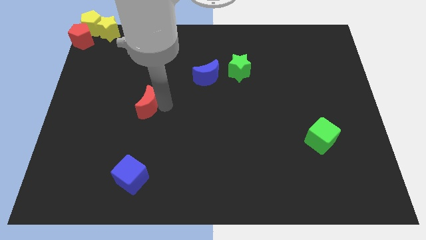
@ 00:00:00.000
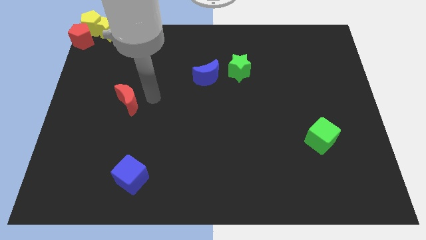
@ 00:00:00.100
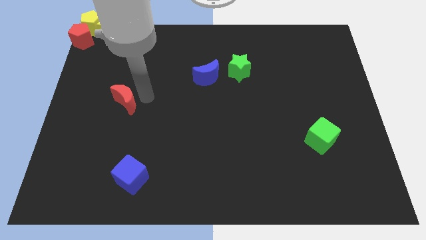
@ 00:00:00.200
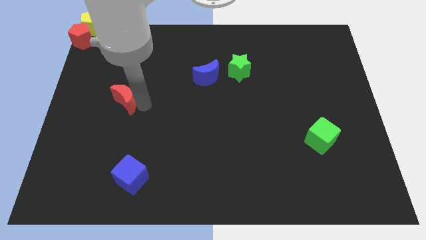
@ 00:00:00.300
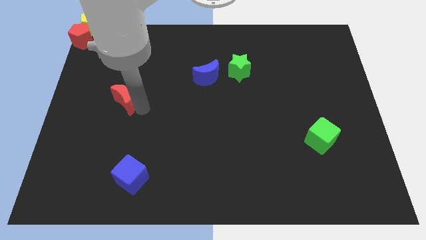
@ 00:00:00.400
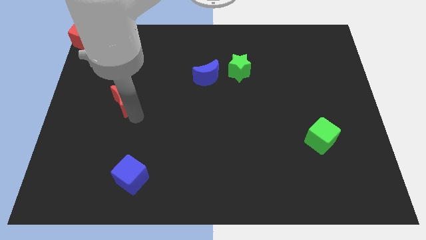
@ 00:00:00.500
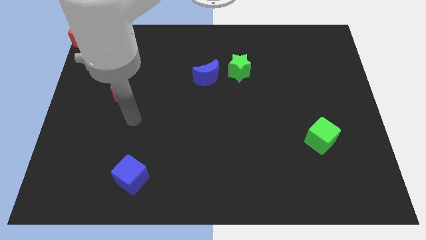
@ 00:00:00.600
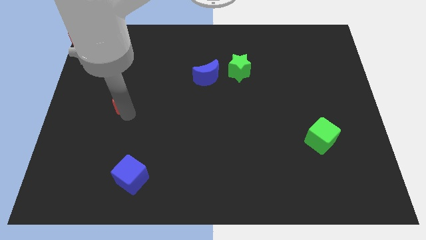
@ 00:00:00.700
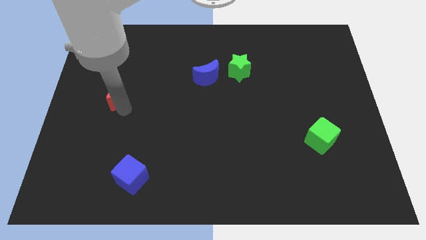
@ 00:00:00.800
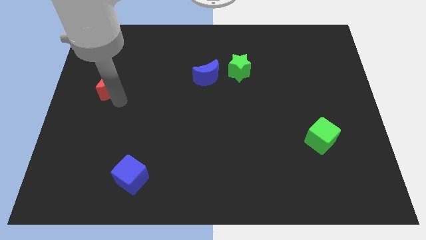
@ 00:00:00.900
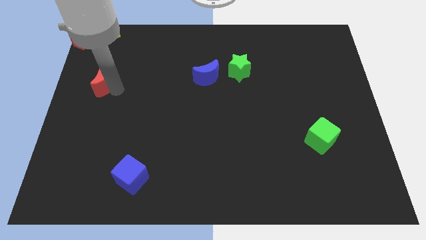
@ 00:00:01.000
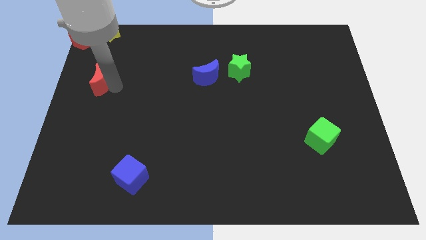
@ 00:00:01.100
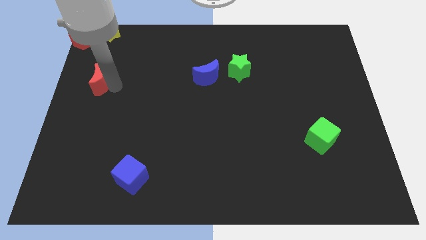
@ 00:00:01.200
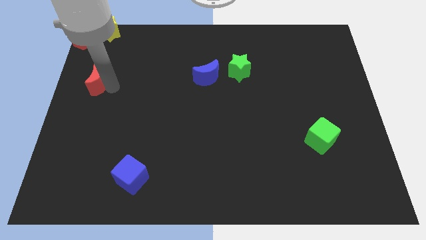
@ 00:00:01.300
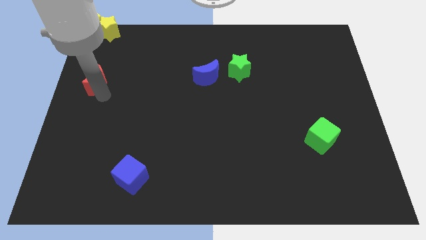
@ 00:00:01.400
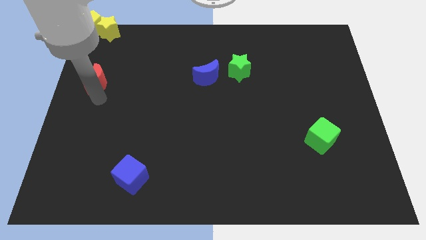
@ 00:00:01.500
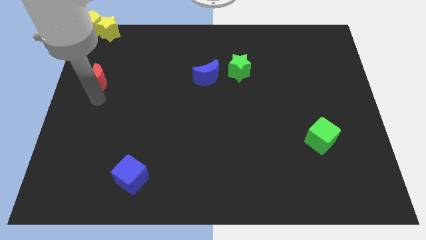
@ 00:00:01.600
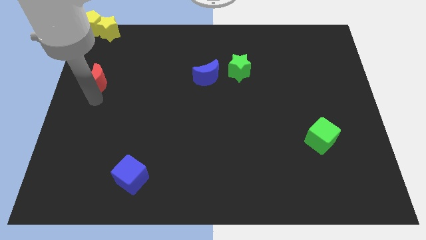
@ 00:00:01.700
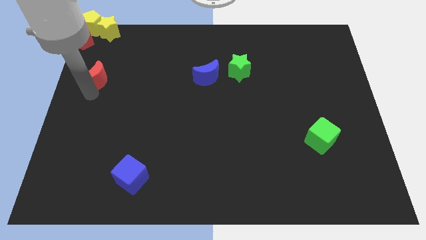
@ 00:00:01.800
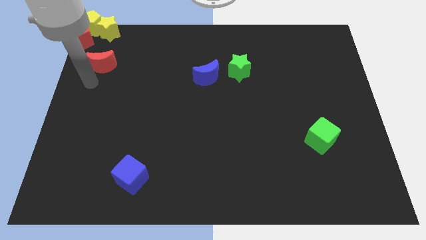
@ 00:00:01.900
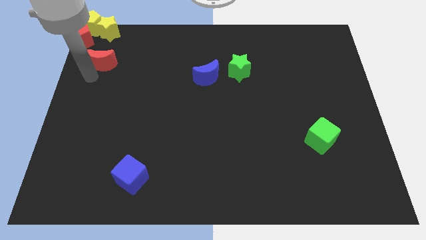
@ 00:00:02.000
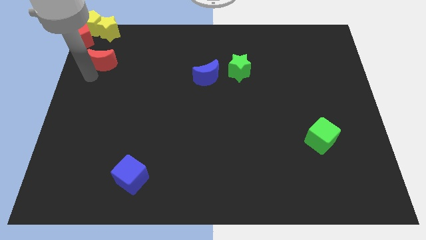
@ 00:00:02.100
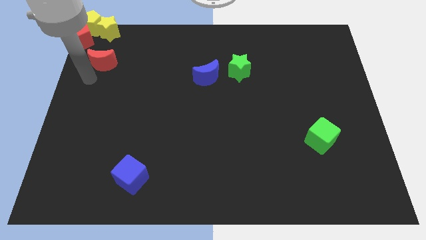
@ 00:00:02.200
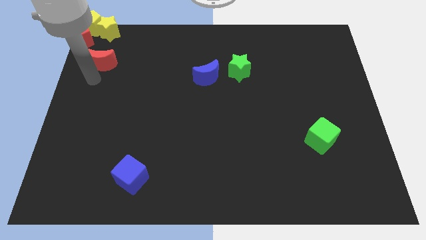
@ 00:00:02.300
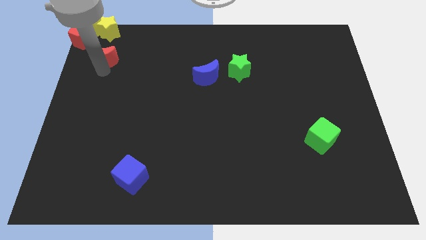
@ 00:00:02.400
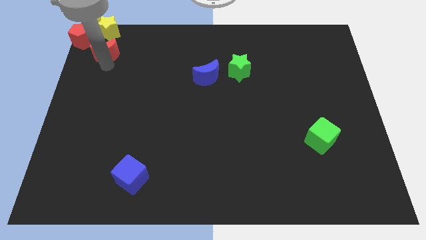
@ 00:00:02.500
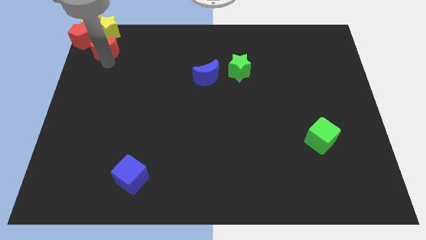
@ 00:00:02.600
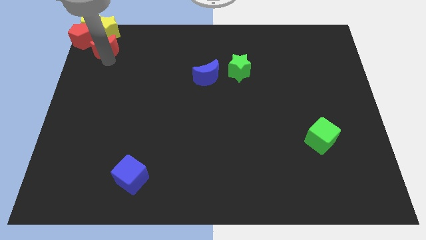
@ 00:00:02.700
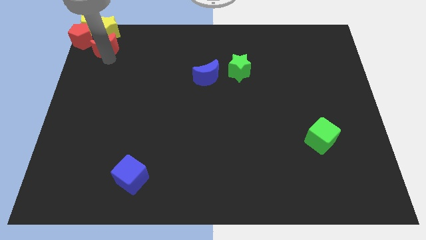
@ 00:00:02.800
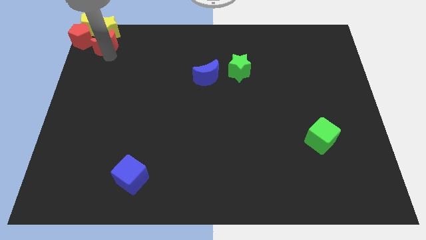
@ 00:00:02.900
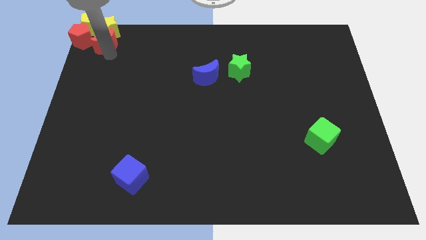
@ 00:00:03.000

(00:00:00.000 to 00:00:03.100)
push red moon into the group of blocks at the top left

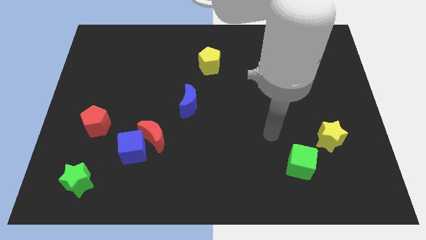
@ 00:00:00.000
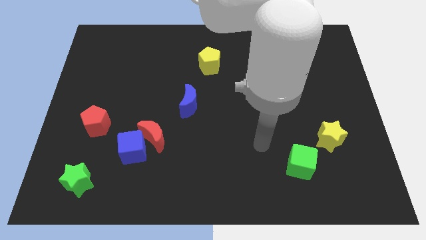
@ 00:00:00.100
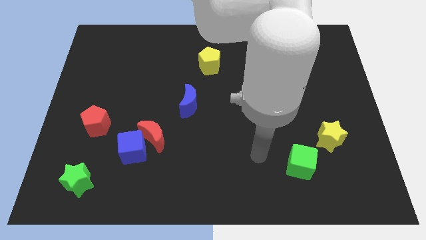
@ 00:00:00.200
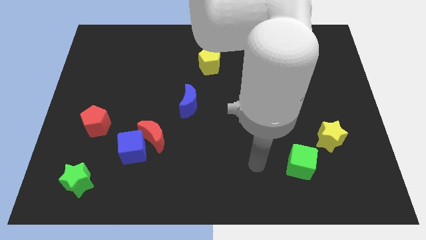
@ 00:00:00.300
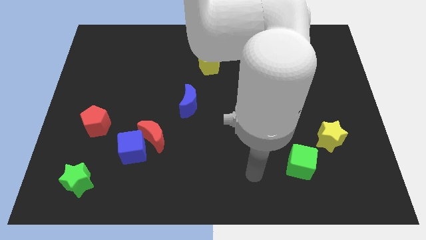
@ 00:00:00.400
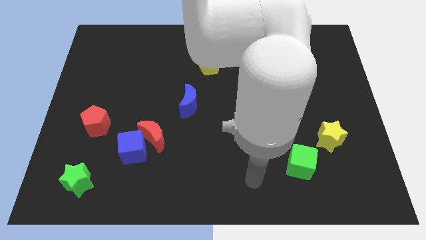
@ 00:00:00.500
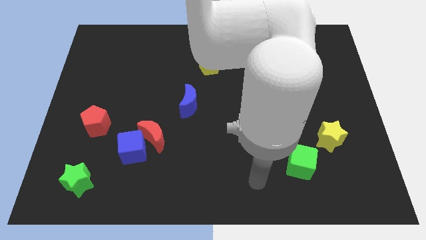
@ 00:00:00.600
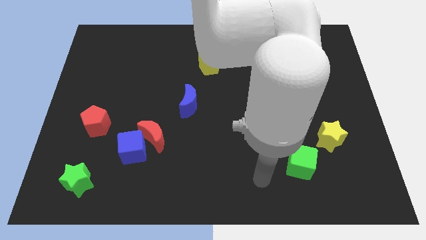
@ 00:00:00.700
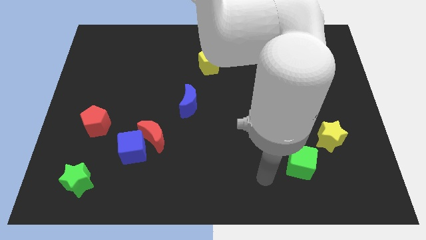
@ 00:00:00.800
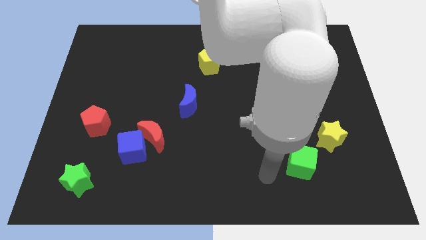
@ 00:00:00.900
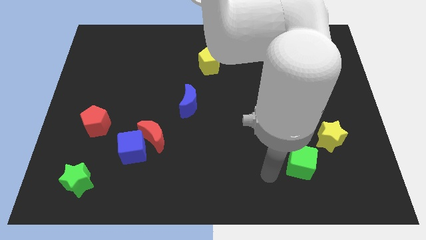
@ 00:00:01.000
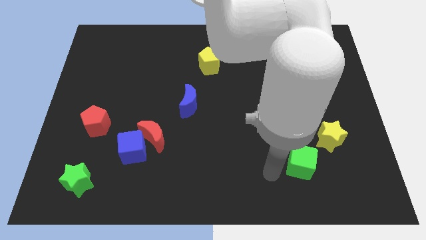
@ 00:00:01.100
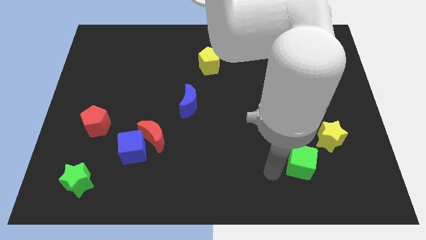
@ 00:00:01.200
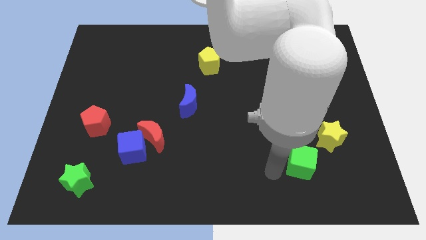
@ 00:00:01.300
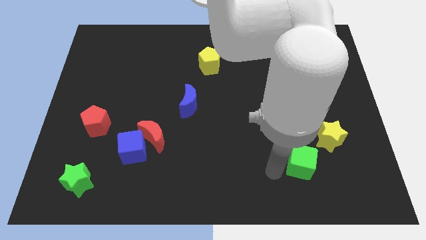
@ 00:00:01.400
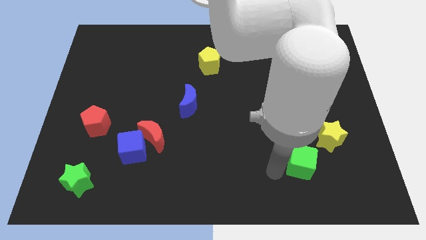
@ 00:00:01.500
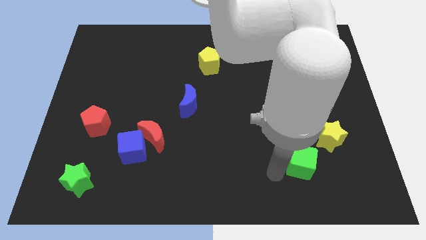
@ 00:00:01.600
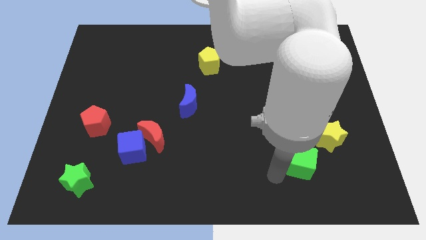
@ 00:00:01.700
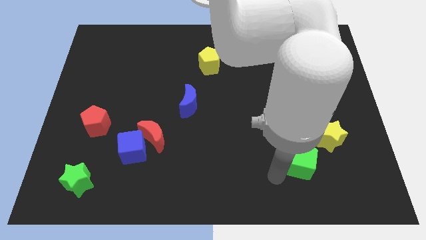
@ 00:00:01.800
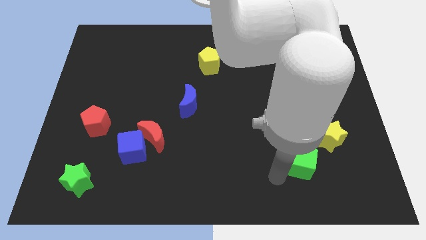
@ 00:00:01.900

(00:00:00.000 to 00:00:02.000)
drag the arm towards green cube

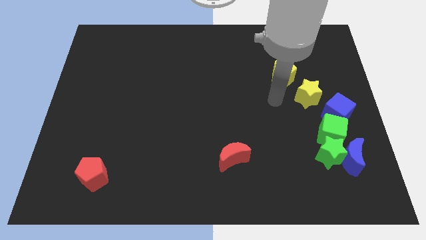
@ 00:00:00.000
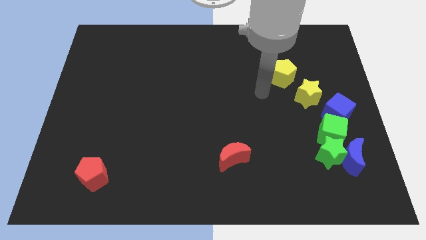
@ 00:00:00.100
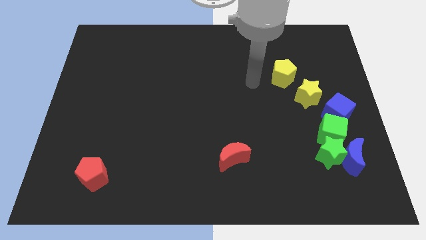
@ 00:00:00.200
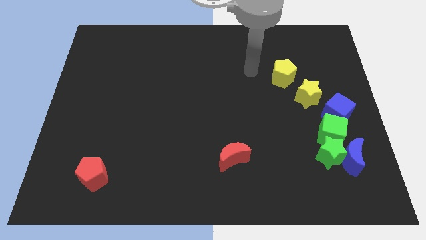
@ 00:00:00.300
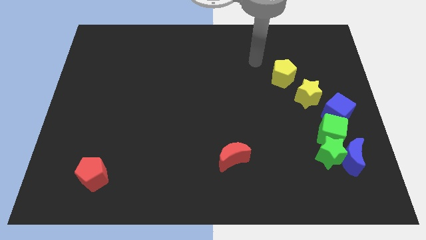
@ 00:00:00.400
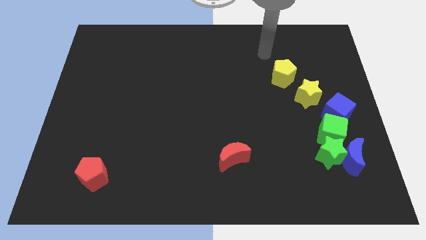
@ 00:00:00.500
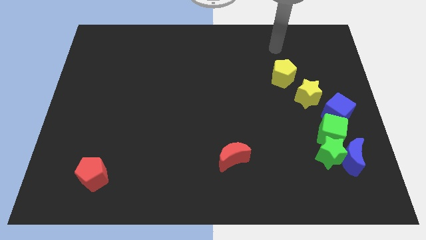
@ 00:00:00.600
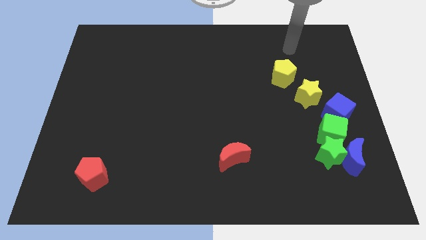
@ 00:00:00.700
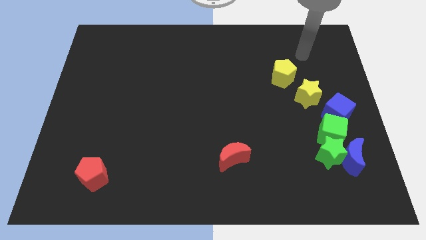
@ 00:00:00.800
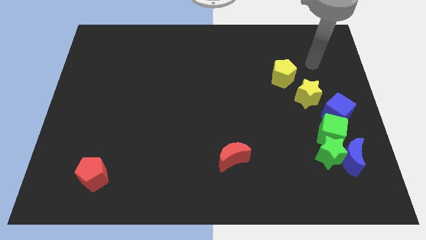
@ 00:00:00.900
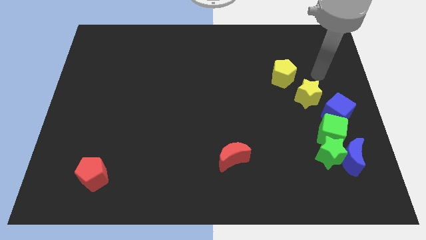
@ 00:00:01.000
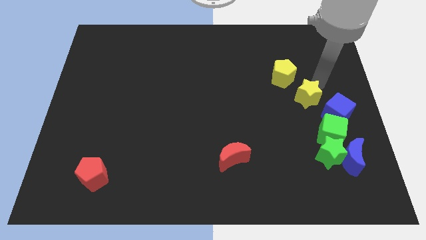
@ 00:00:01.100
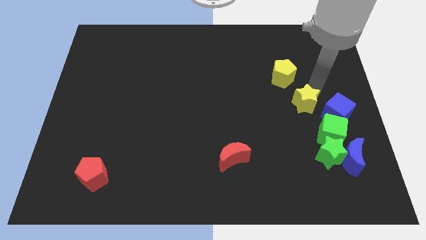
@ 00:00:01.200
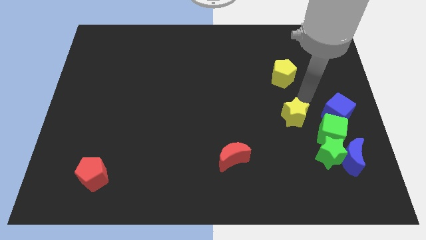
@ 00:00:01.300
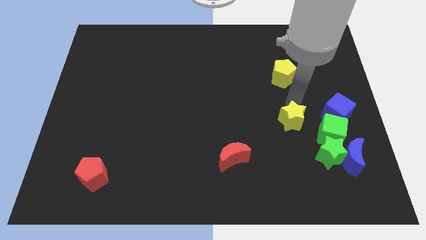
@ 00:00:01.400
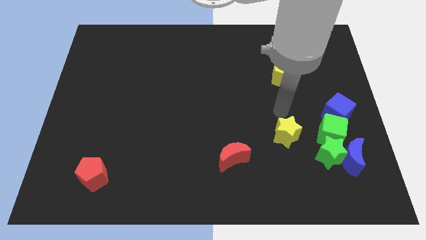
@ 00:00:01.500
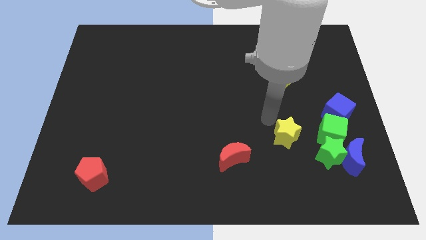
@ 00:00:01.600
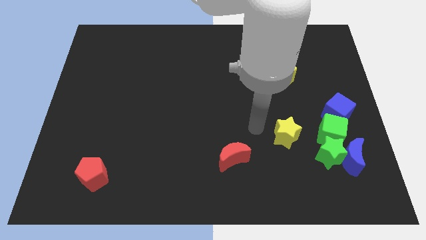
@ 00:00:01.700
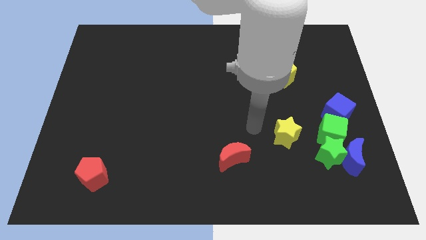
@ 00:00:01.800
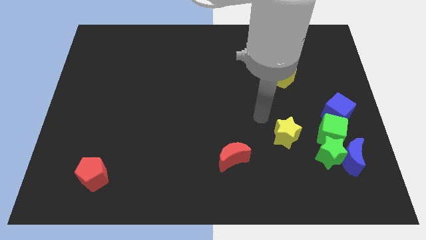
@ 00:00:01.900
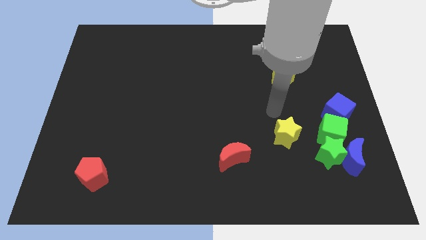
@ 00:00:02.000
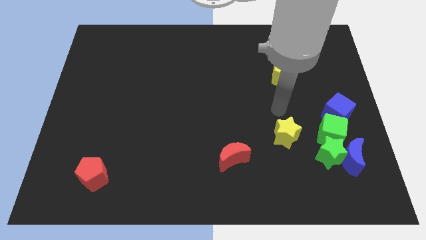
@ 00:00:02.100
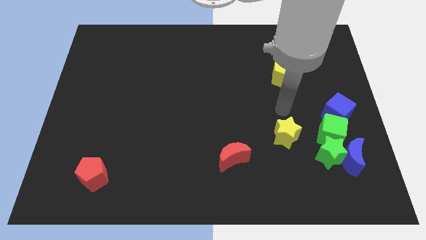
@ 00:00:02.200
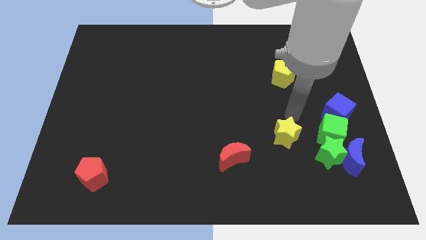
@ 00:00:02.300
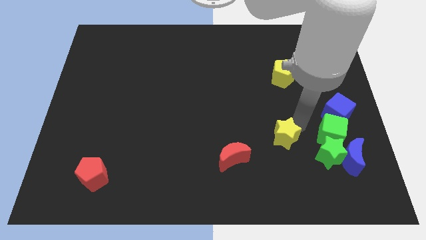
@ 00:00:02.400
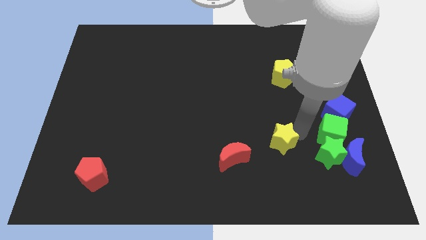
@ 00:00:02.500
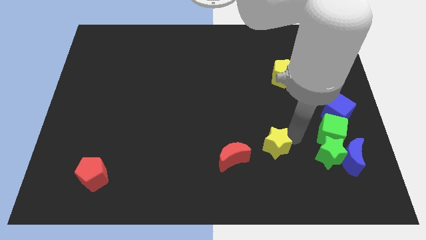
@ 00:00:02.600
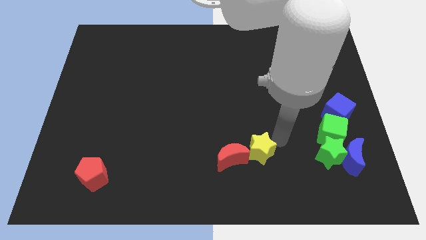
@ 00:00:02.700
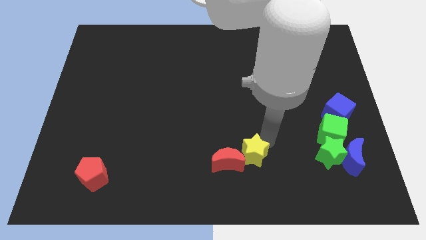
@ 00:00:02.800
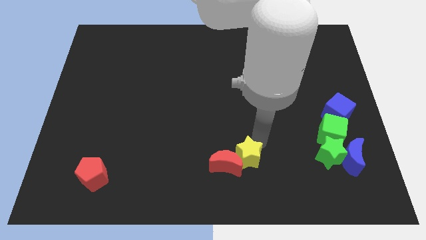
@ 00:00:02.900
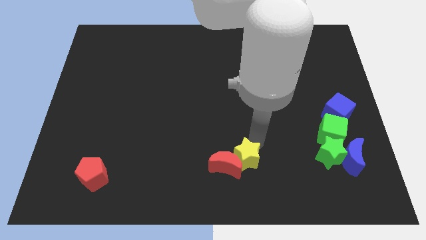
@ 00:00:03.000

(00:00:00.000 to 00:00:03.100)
push the yellow star into the red moon

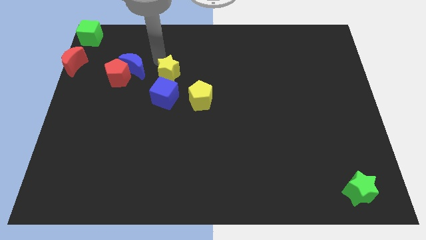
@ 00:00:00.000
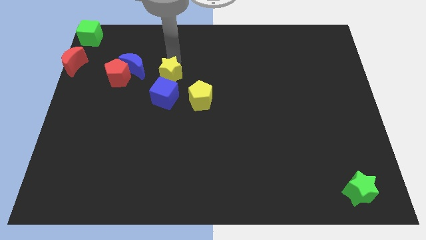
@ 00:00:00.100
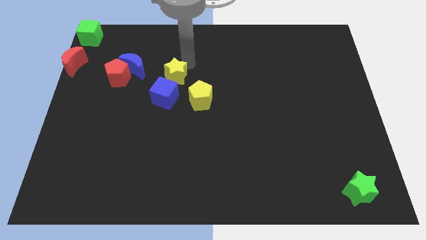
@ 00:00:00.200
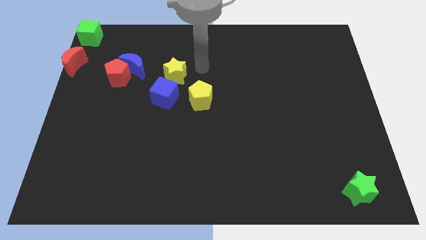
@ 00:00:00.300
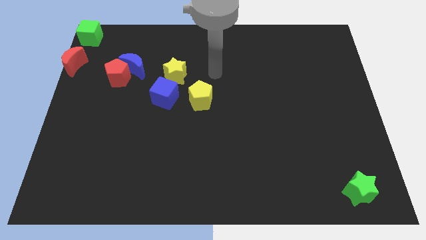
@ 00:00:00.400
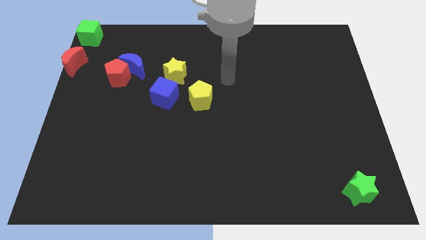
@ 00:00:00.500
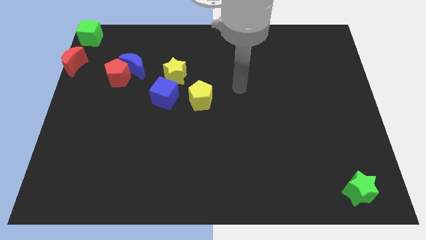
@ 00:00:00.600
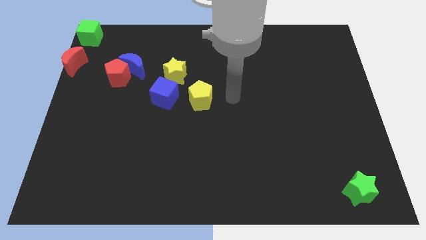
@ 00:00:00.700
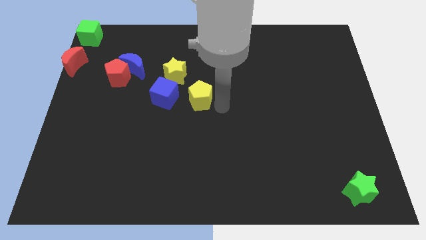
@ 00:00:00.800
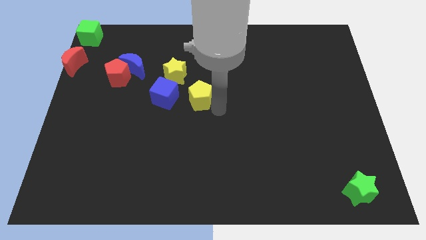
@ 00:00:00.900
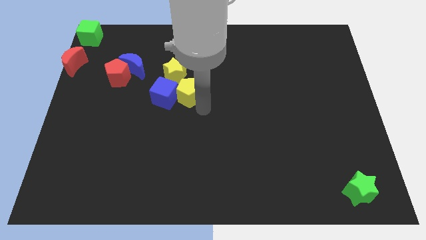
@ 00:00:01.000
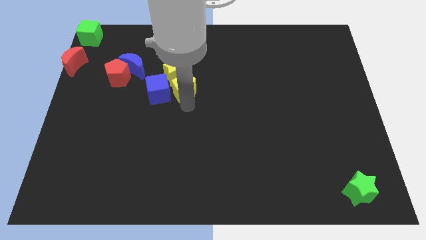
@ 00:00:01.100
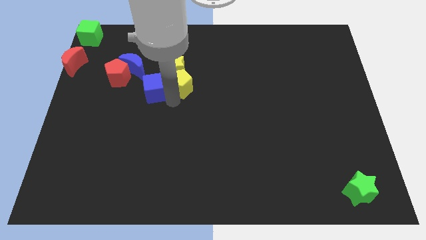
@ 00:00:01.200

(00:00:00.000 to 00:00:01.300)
push the yellow pentagon into the blue cube
